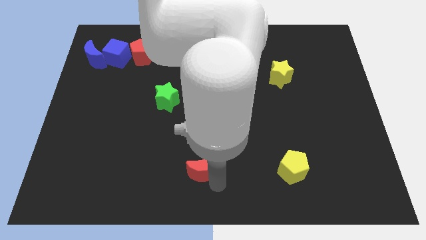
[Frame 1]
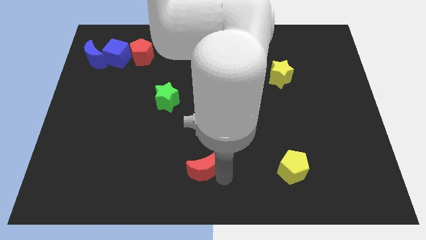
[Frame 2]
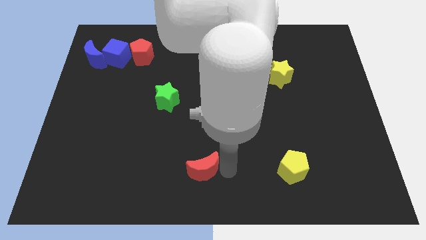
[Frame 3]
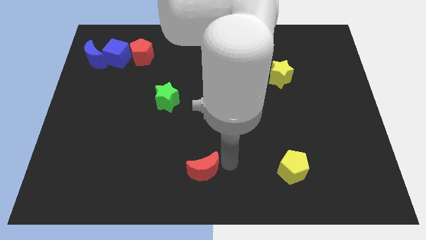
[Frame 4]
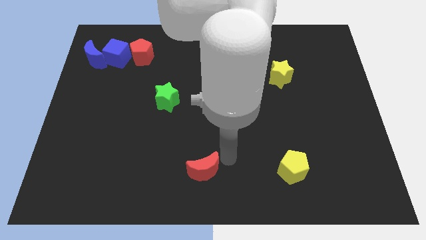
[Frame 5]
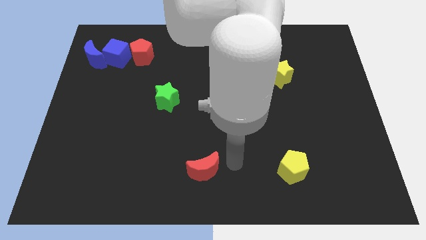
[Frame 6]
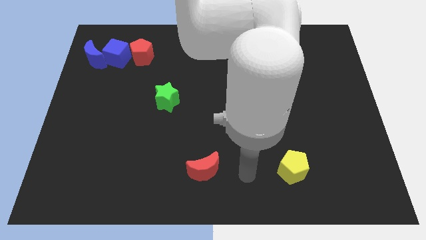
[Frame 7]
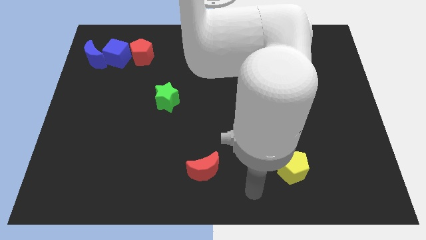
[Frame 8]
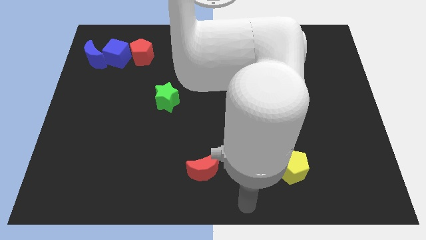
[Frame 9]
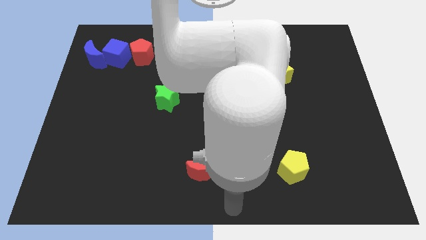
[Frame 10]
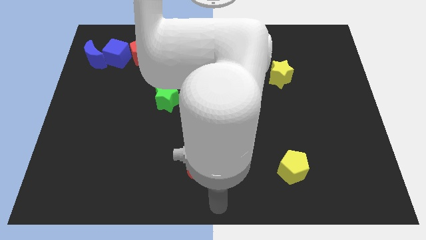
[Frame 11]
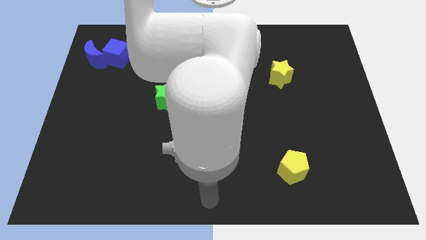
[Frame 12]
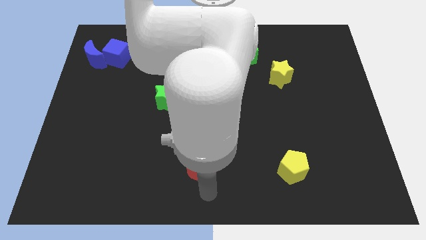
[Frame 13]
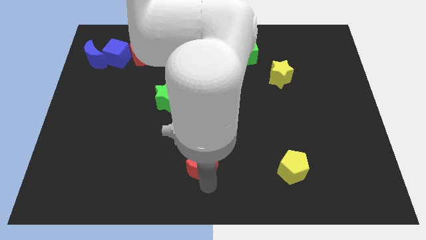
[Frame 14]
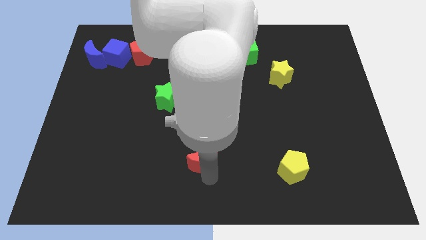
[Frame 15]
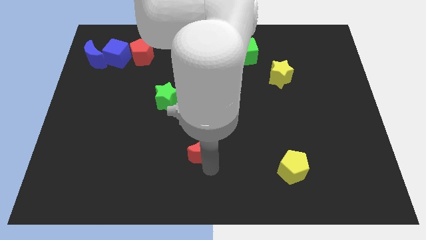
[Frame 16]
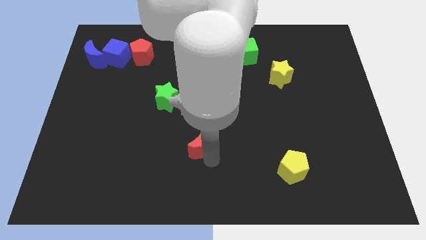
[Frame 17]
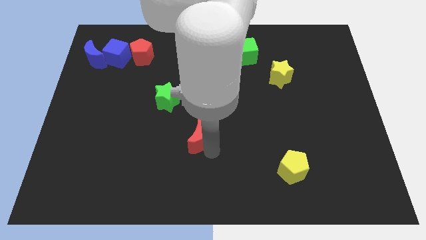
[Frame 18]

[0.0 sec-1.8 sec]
move the red moon slightly to the top side of the board

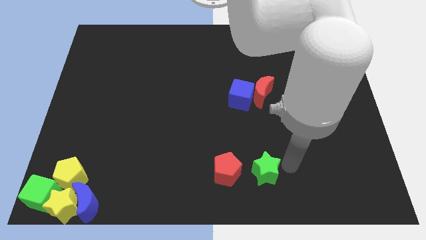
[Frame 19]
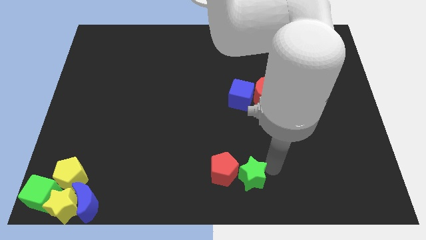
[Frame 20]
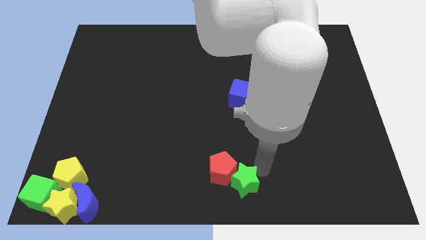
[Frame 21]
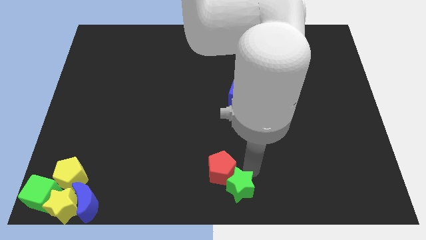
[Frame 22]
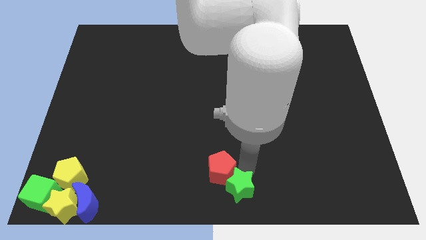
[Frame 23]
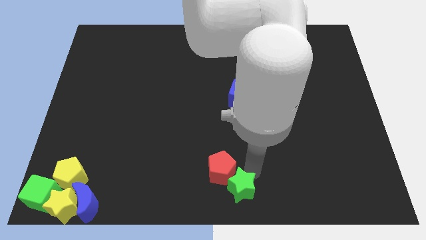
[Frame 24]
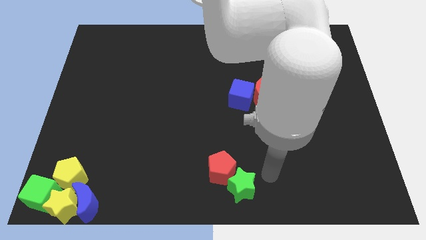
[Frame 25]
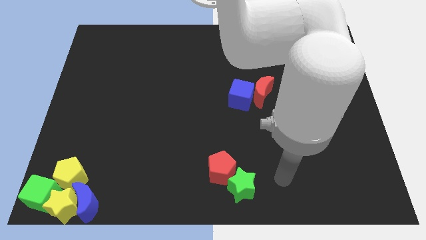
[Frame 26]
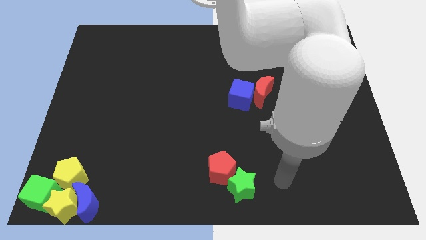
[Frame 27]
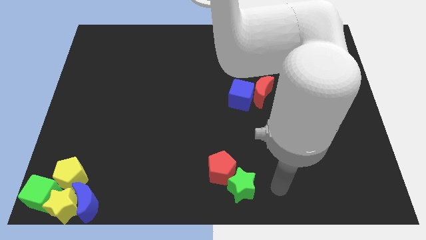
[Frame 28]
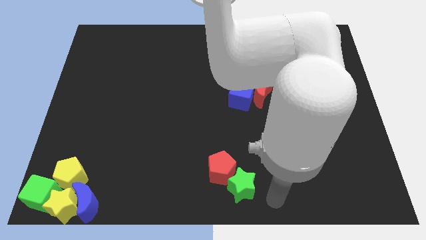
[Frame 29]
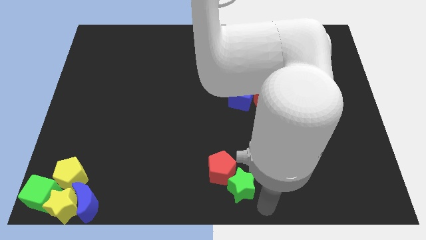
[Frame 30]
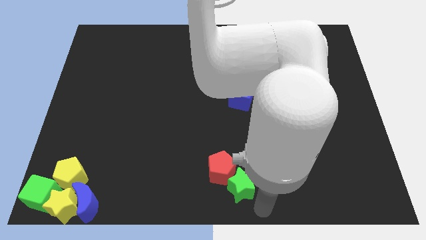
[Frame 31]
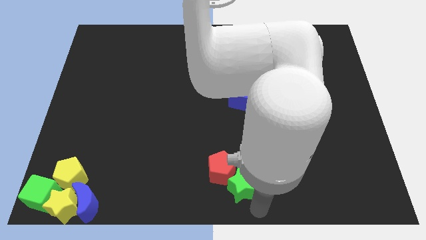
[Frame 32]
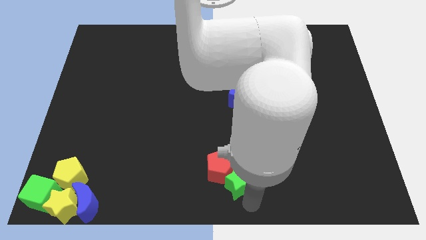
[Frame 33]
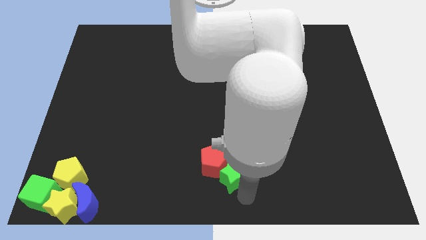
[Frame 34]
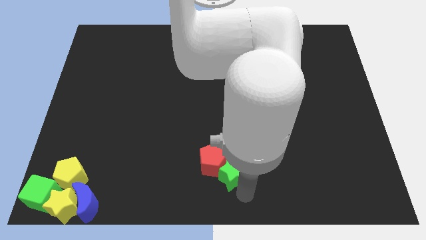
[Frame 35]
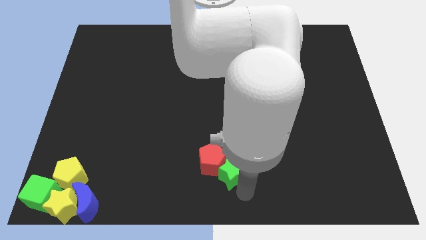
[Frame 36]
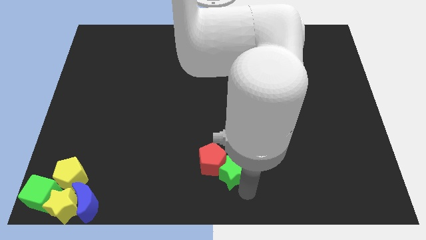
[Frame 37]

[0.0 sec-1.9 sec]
push the green star into the red pentagon

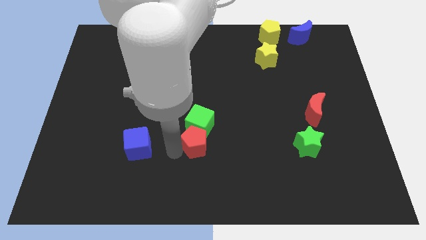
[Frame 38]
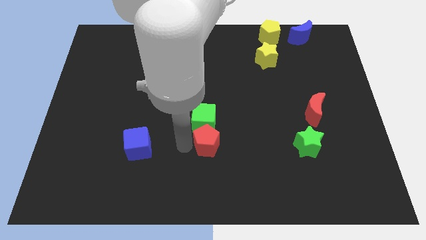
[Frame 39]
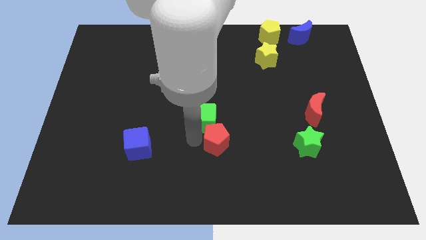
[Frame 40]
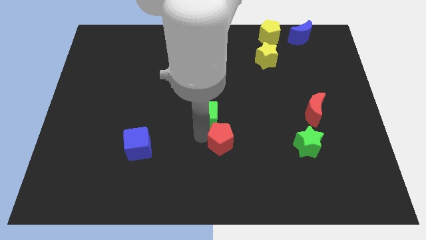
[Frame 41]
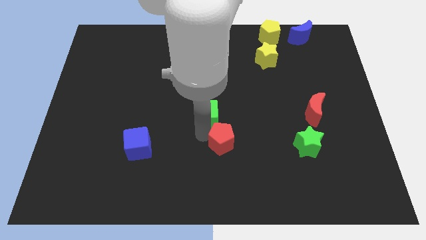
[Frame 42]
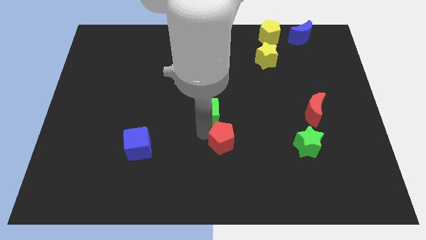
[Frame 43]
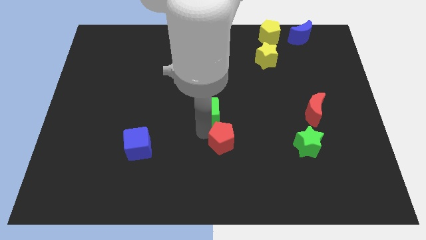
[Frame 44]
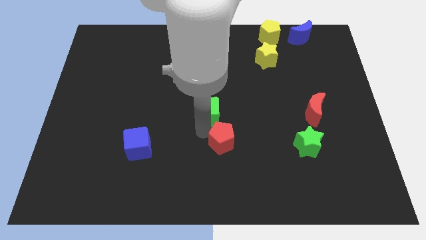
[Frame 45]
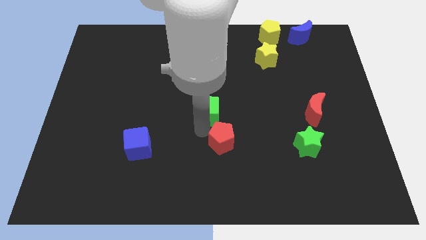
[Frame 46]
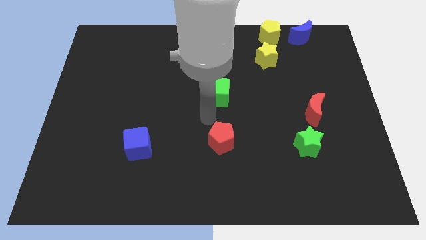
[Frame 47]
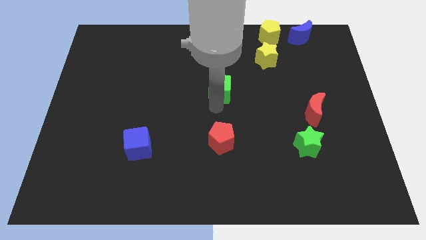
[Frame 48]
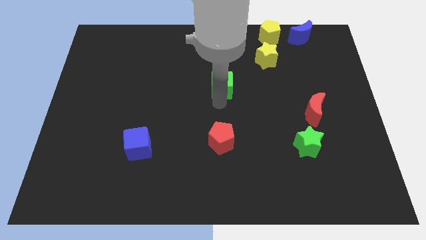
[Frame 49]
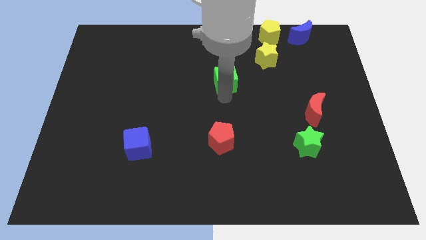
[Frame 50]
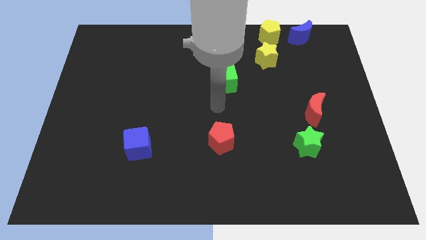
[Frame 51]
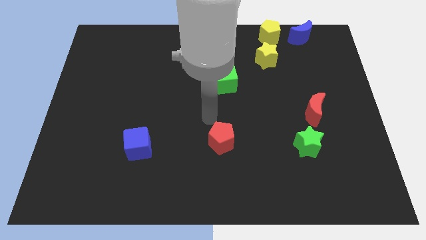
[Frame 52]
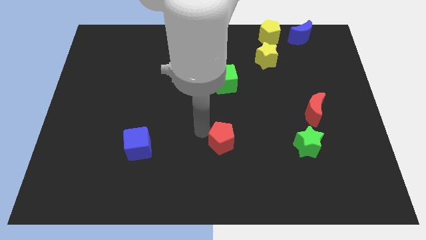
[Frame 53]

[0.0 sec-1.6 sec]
move the green cube away from the red pentagon

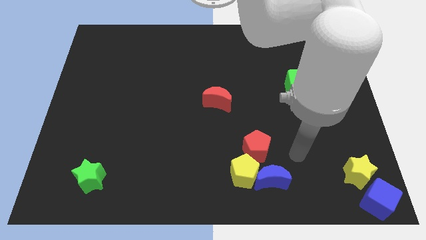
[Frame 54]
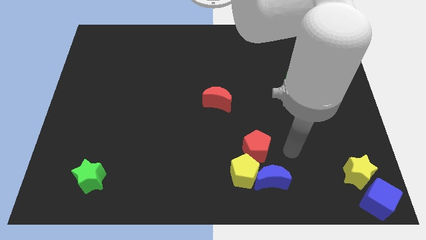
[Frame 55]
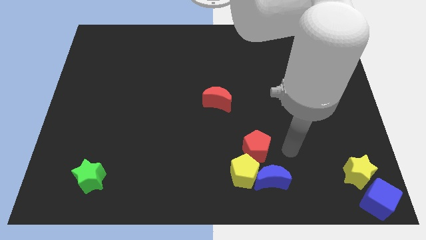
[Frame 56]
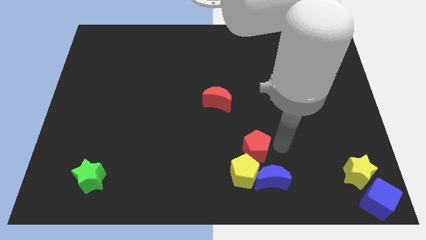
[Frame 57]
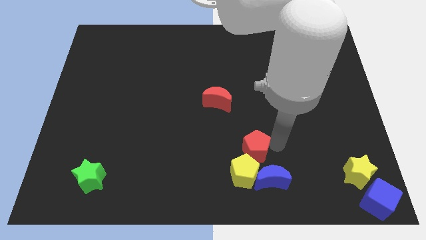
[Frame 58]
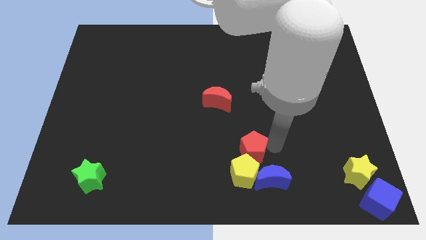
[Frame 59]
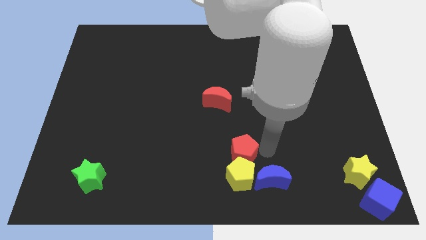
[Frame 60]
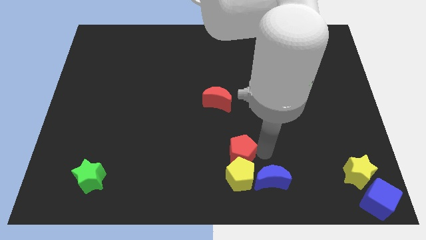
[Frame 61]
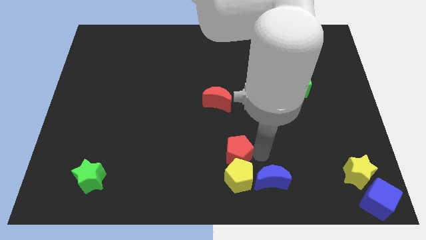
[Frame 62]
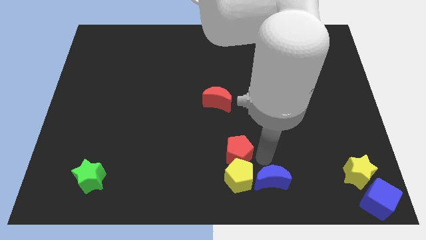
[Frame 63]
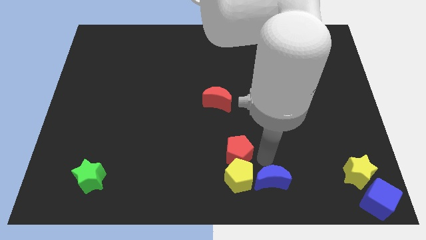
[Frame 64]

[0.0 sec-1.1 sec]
move the red pentagon into the top side of the yellow pentagon

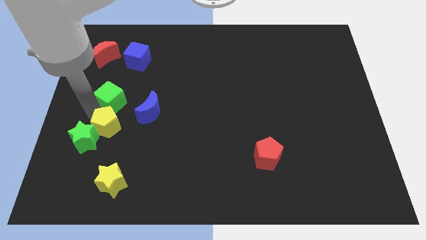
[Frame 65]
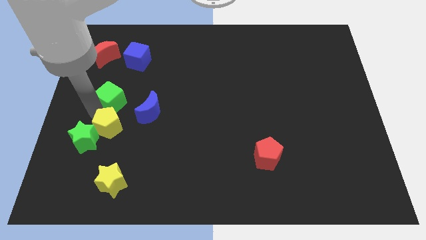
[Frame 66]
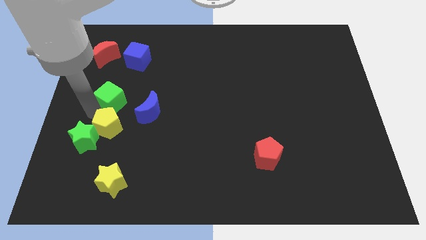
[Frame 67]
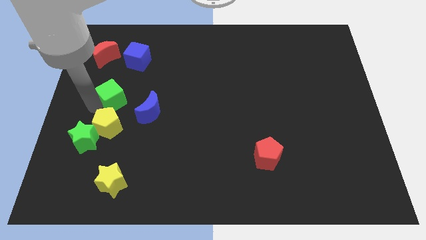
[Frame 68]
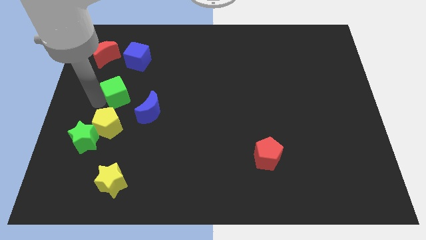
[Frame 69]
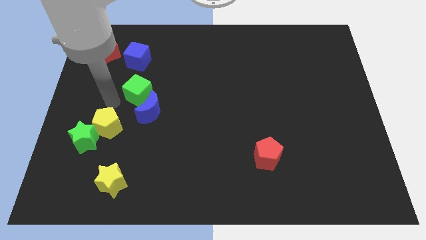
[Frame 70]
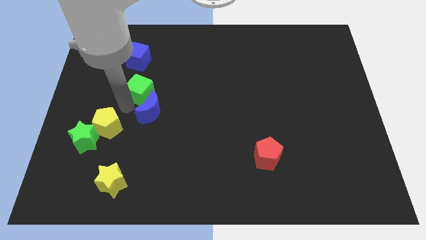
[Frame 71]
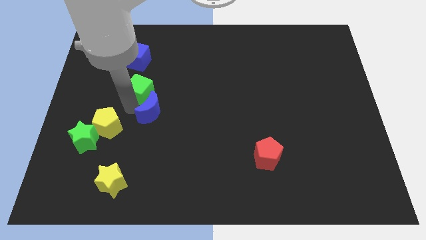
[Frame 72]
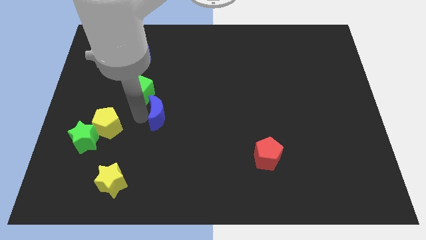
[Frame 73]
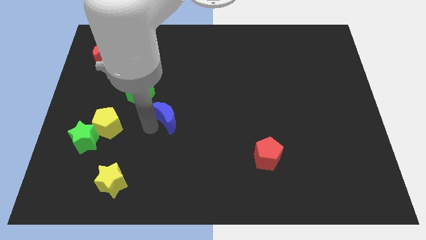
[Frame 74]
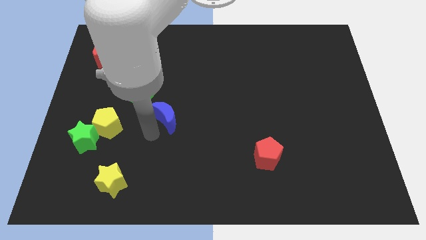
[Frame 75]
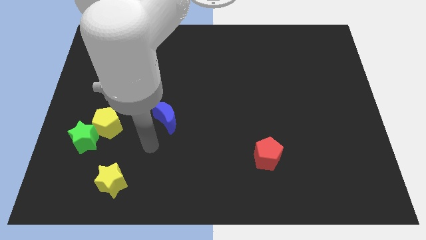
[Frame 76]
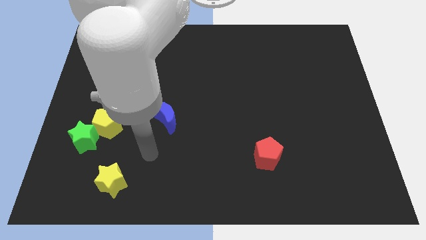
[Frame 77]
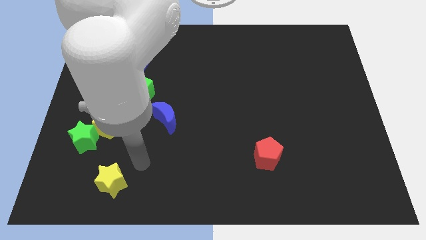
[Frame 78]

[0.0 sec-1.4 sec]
touch the yellow pentagon

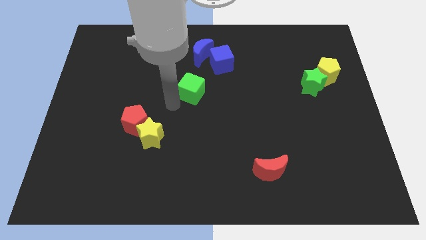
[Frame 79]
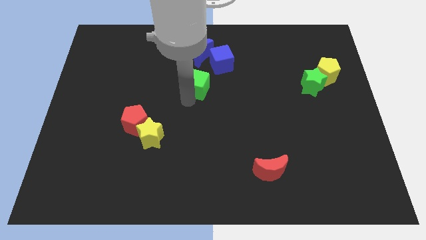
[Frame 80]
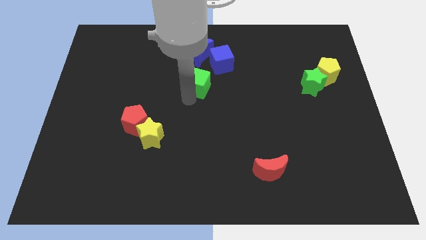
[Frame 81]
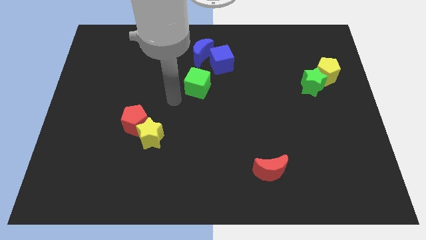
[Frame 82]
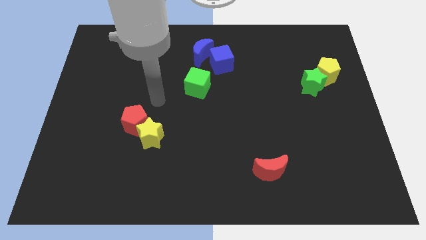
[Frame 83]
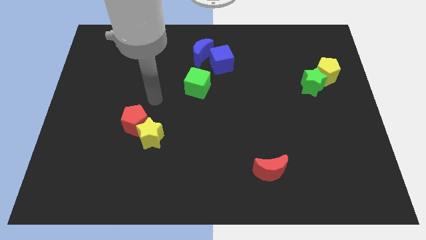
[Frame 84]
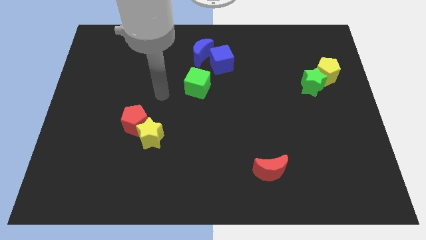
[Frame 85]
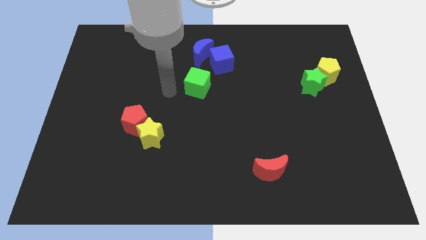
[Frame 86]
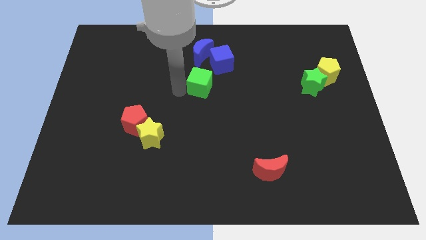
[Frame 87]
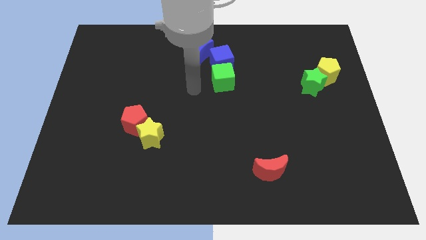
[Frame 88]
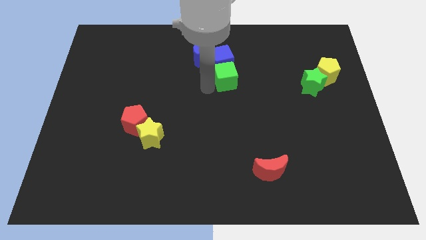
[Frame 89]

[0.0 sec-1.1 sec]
move the green cube at the bottom of blue cube
